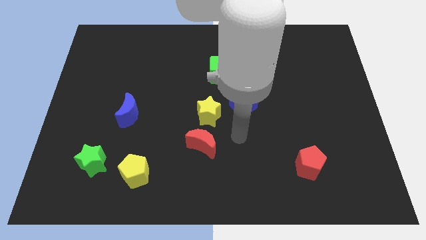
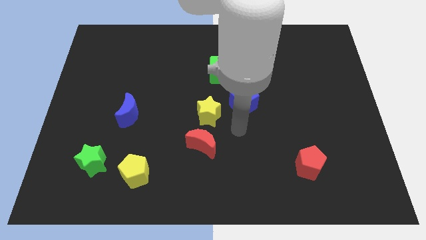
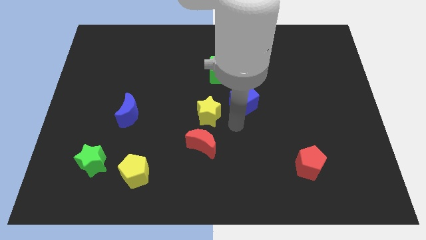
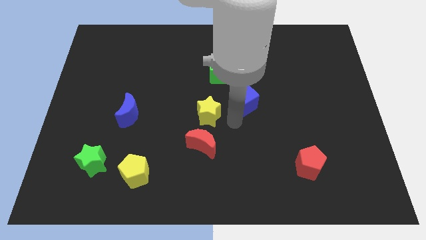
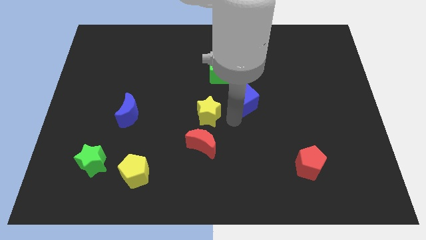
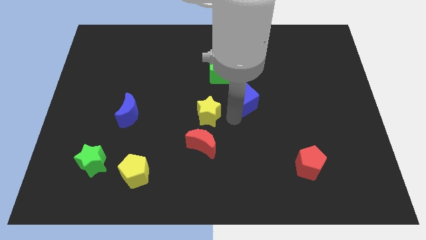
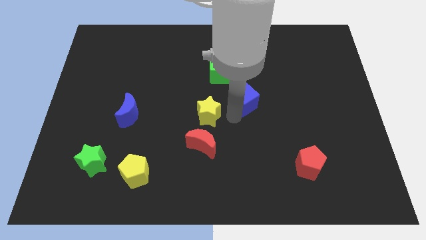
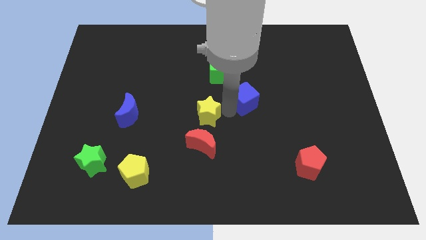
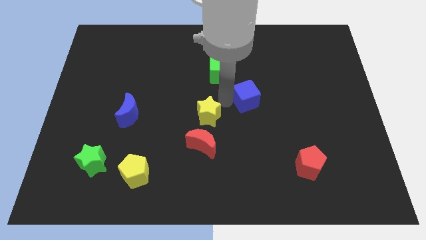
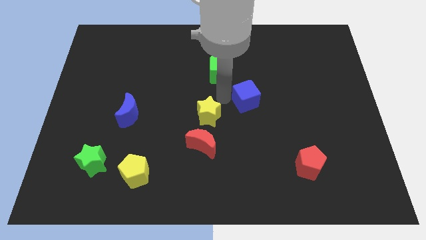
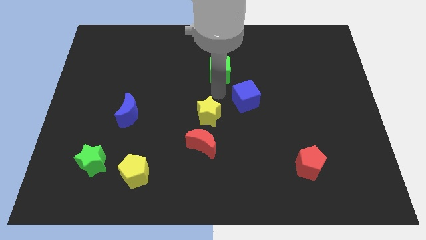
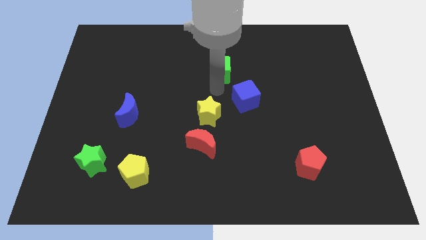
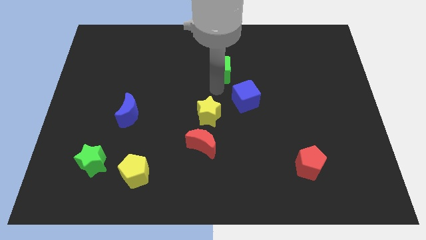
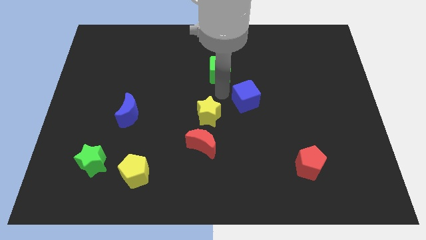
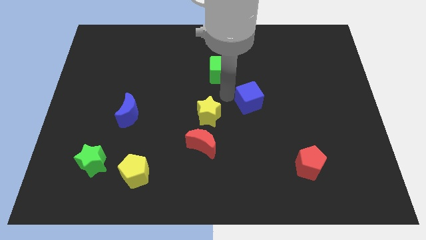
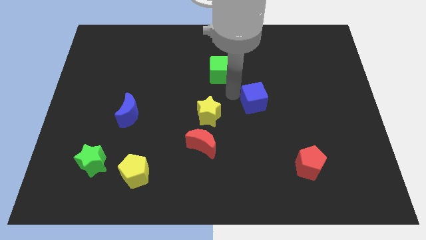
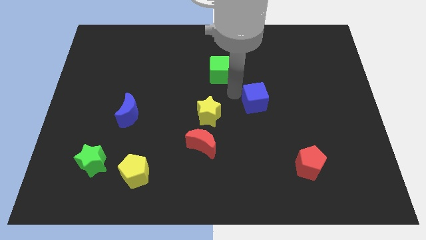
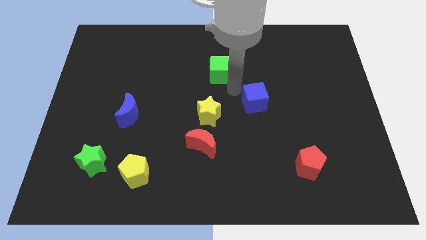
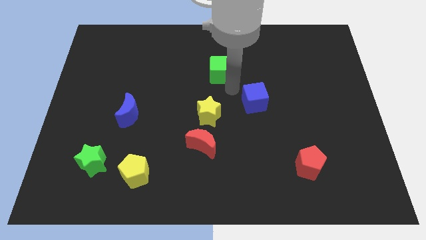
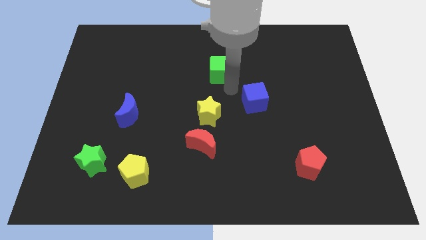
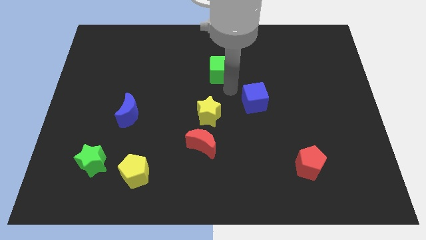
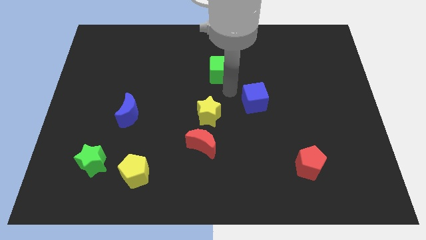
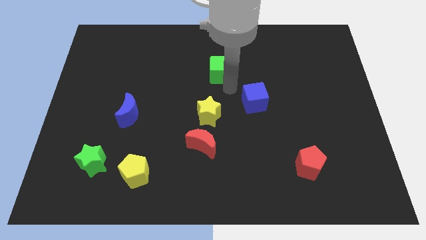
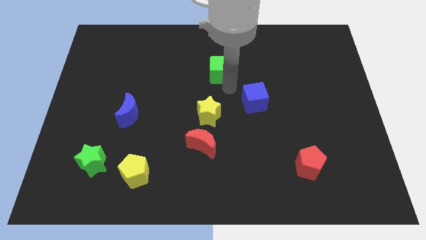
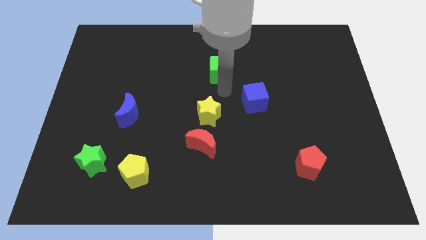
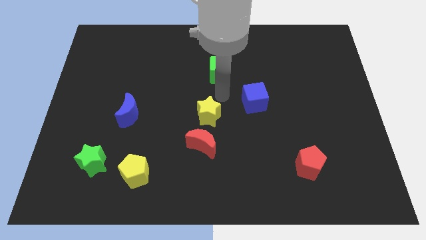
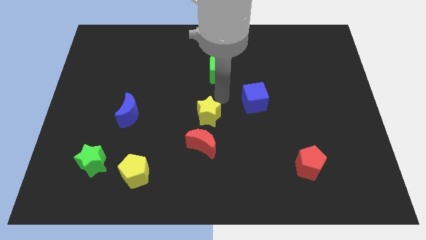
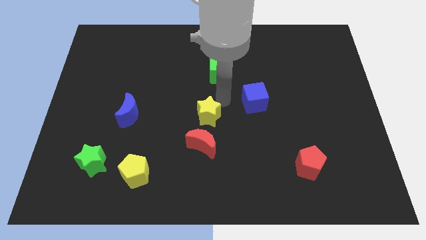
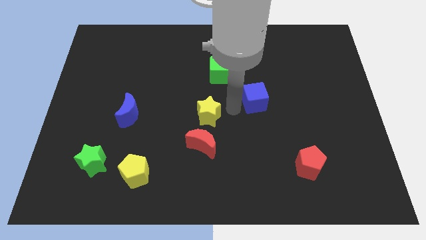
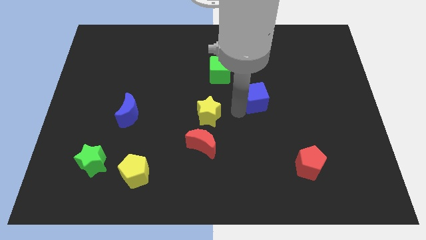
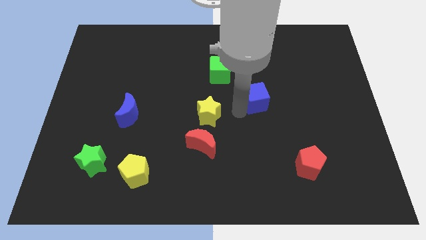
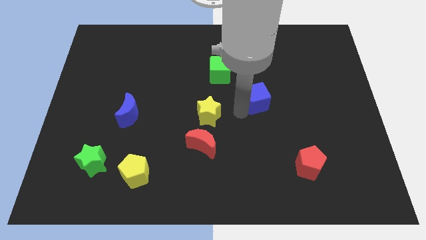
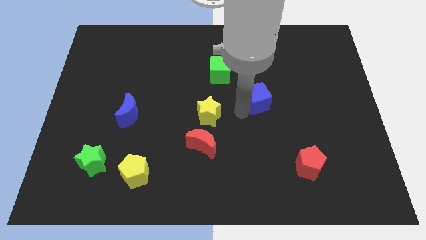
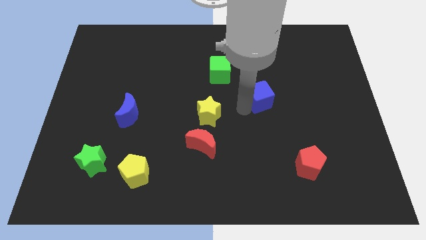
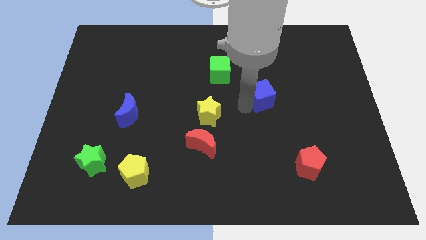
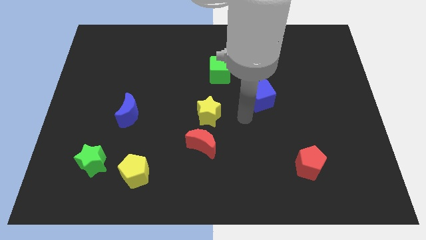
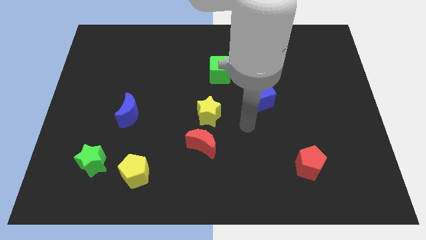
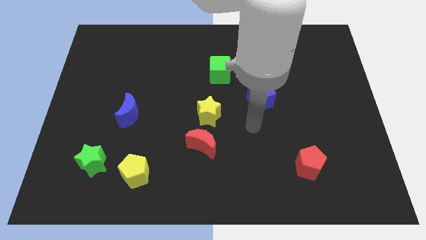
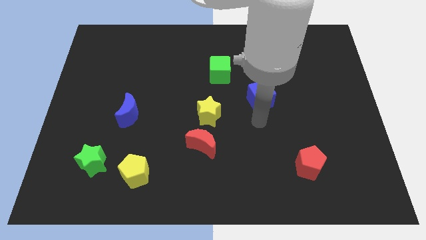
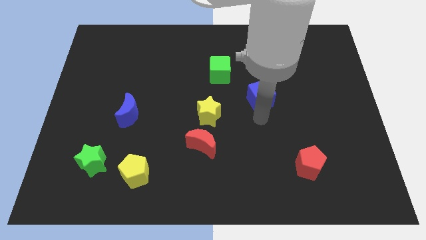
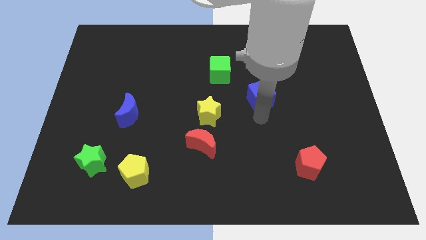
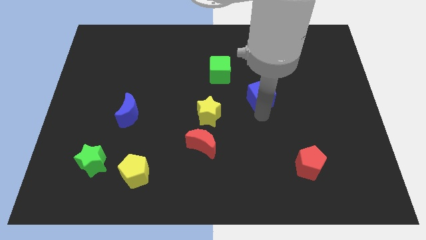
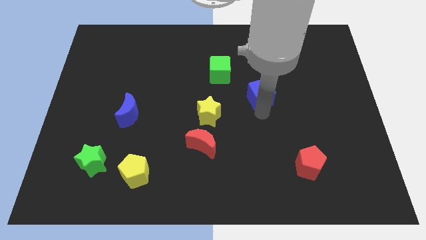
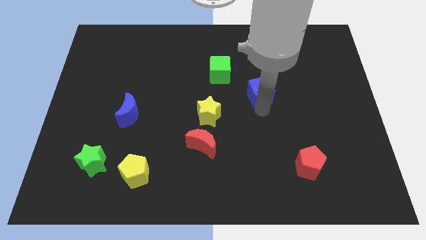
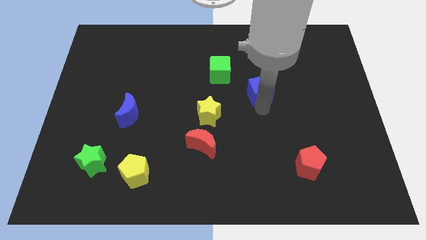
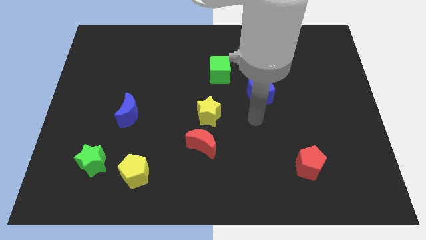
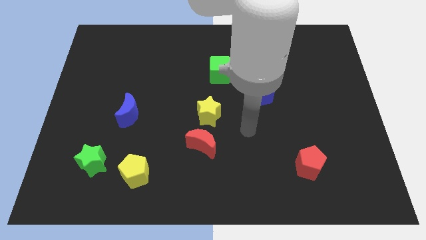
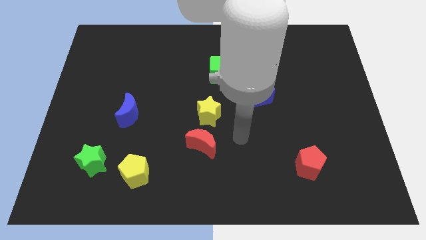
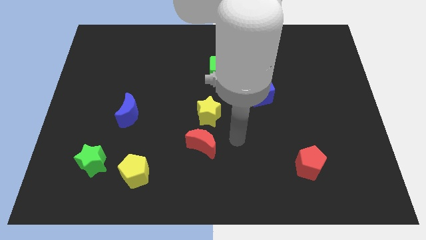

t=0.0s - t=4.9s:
move the blue cube diagonally at the bottom right to the green cube

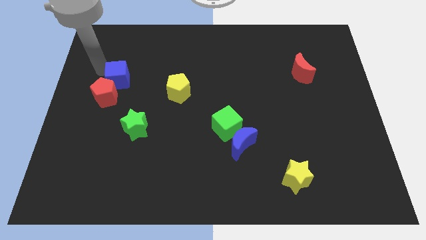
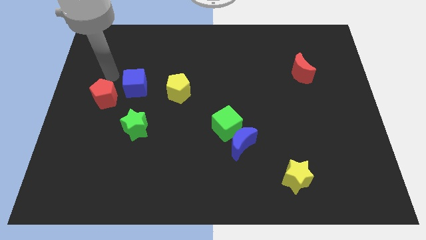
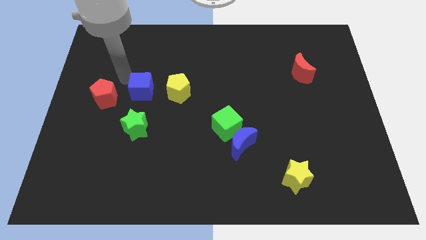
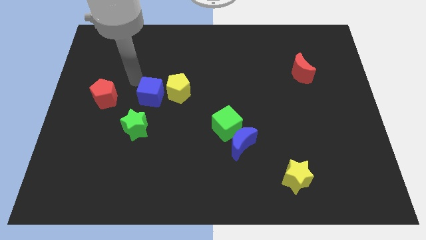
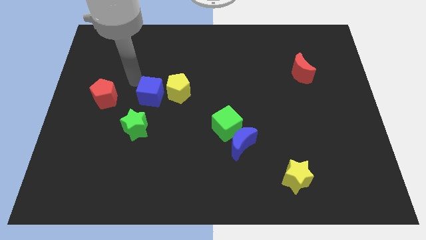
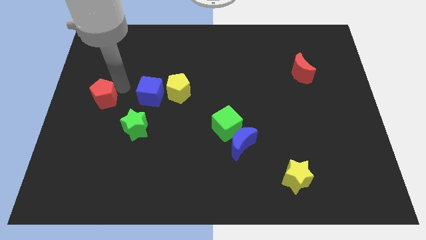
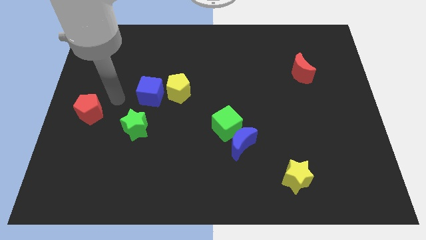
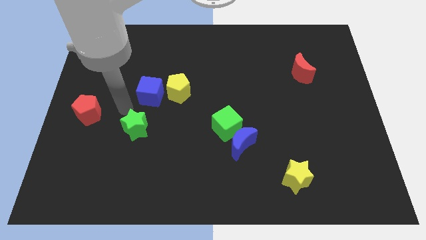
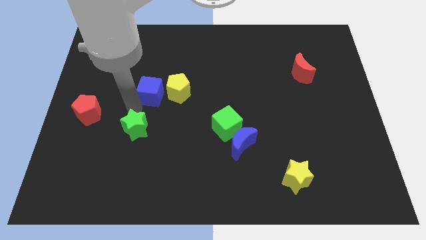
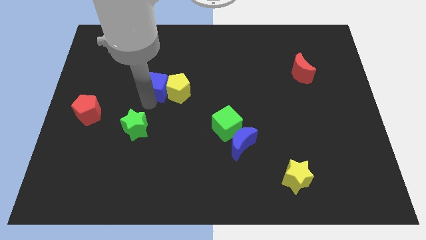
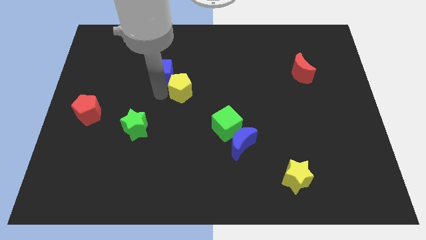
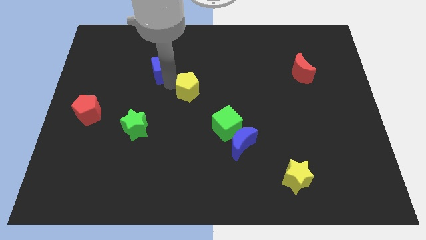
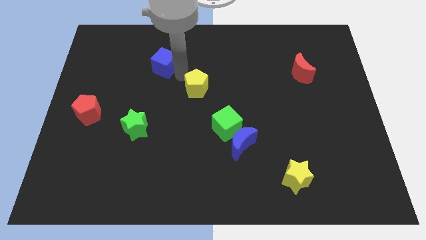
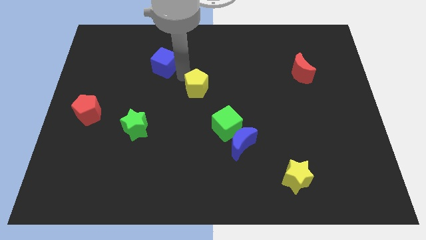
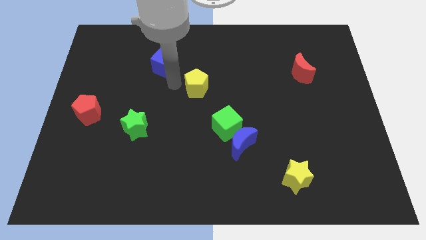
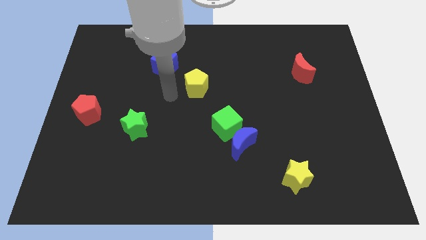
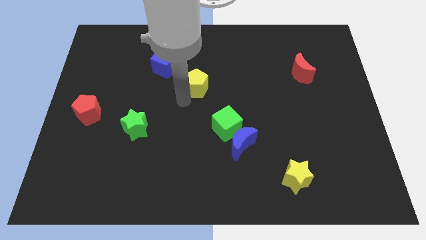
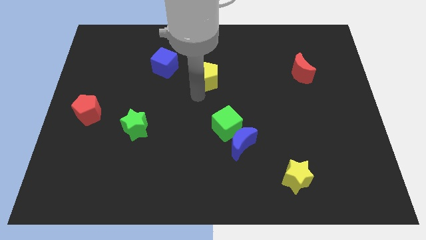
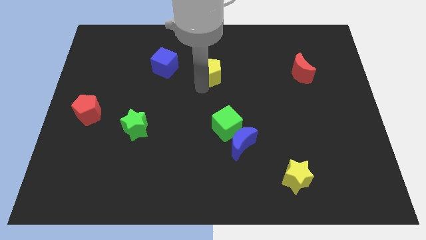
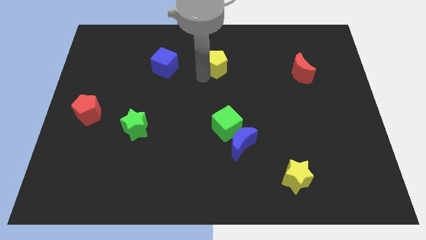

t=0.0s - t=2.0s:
push the red pentagon towards the left center of the board

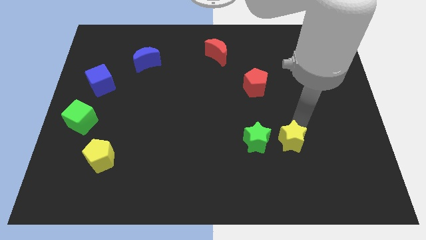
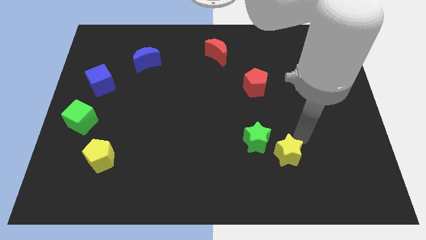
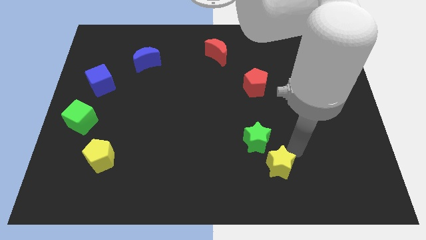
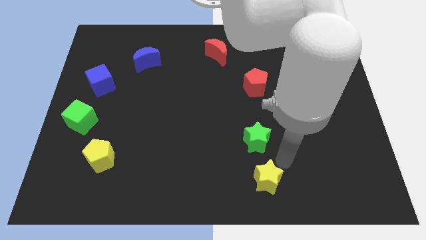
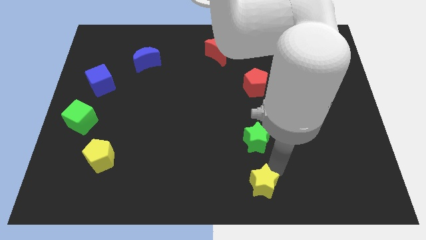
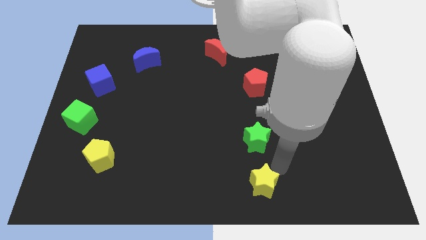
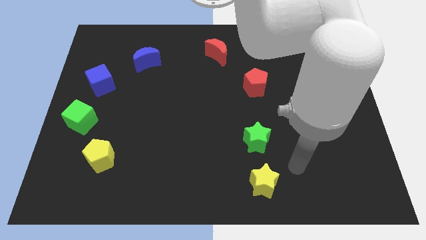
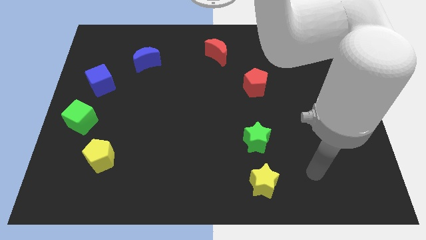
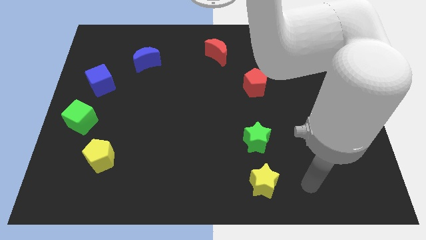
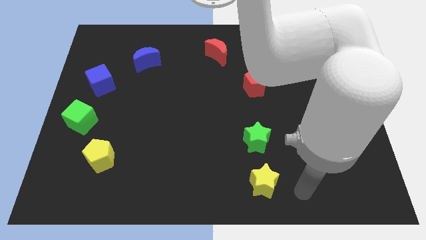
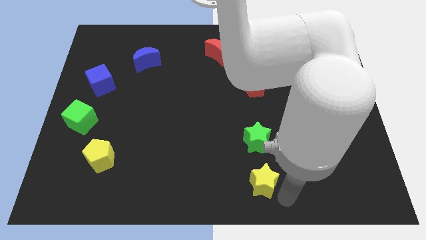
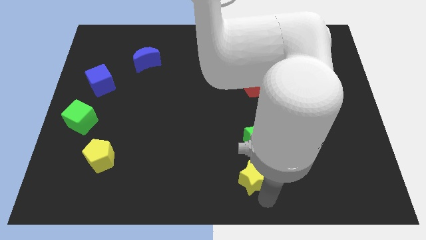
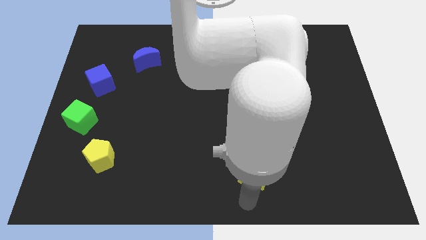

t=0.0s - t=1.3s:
push the yellow star to the bottom center of the board

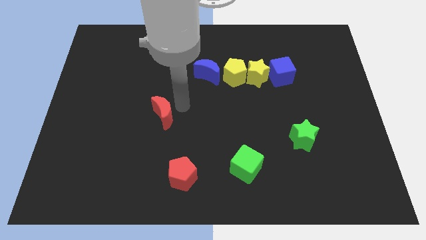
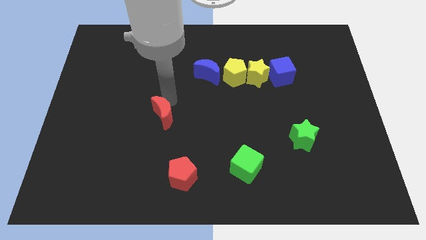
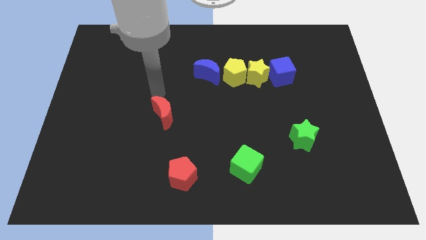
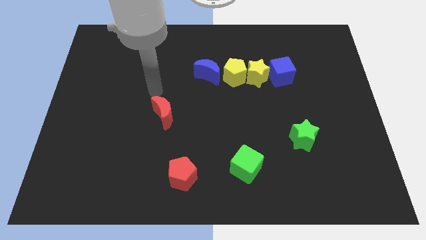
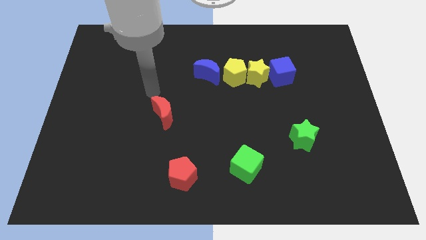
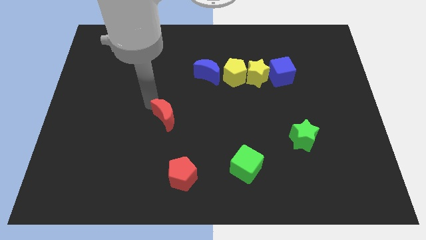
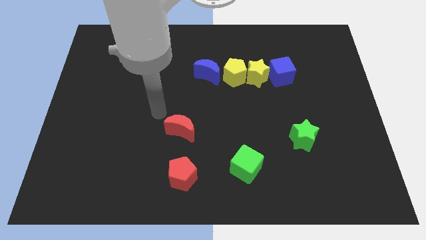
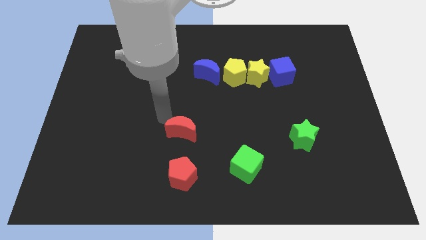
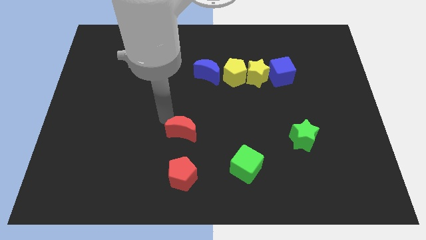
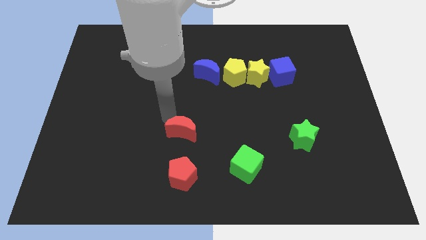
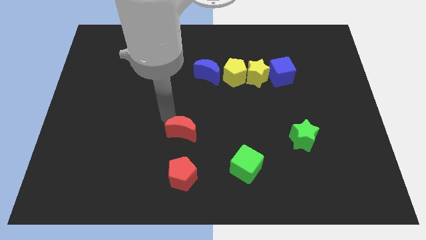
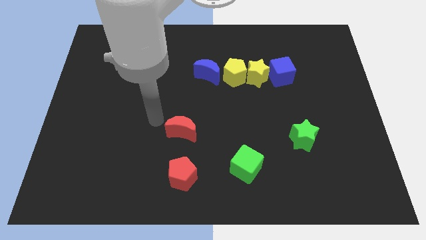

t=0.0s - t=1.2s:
place the red crescent above the red pentagon
